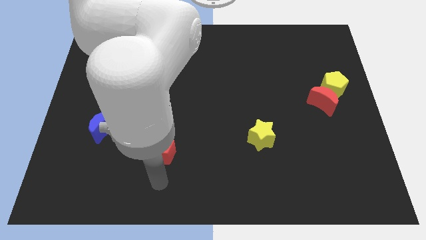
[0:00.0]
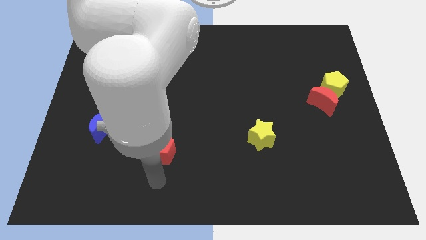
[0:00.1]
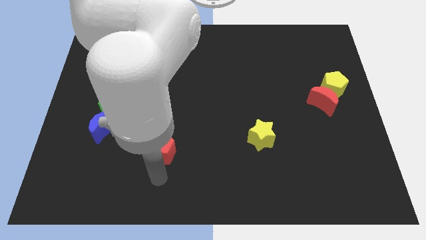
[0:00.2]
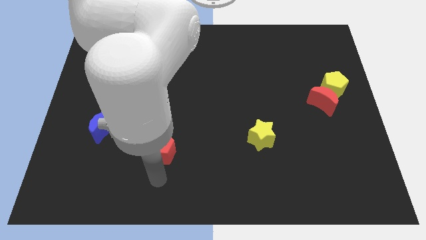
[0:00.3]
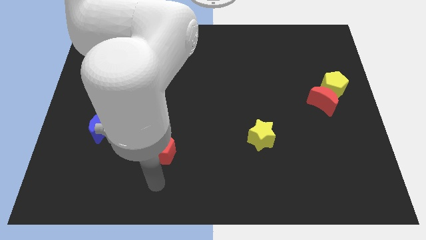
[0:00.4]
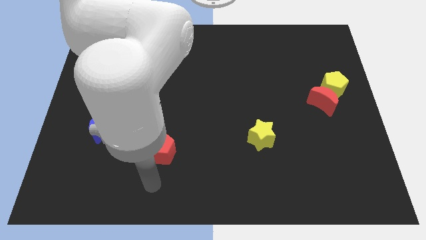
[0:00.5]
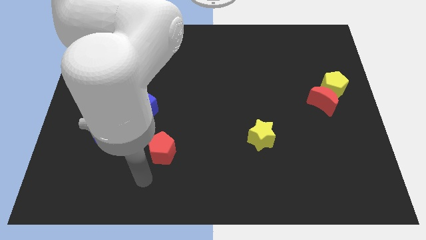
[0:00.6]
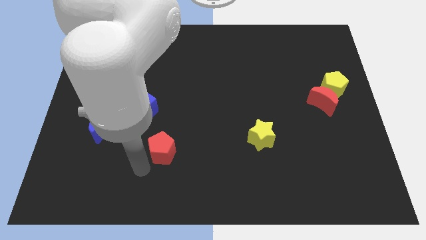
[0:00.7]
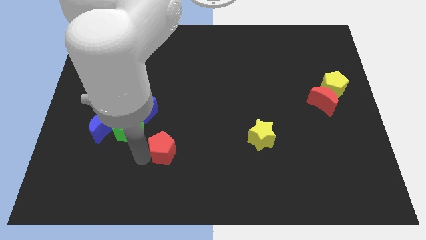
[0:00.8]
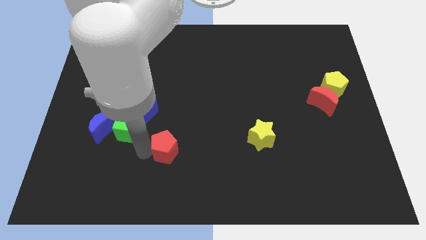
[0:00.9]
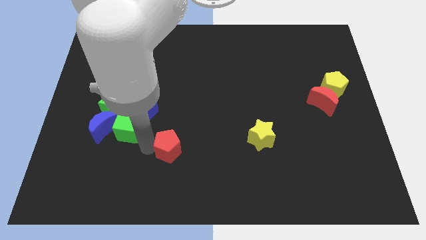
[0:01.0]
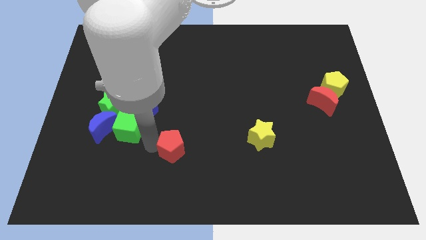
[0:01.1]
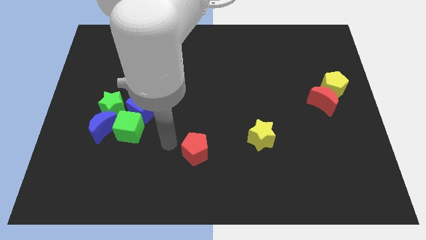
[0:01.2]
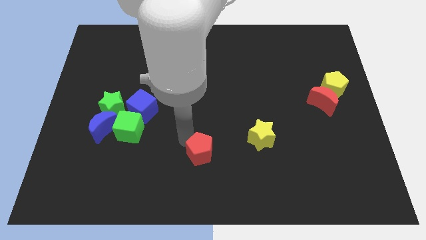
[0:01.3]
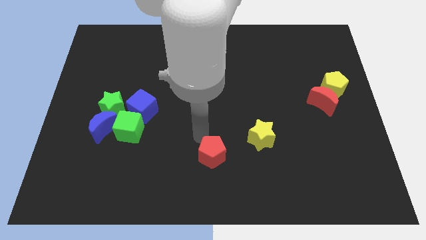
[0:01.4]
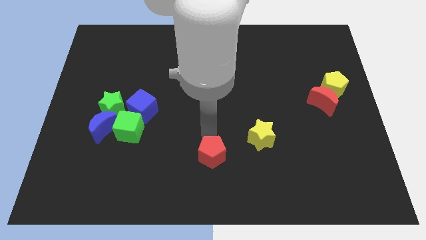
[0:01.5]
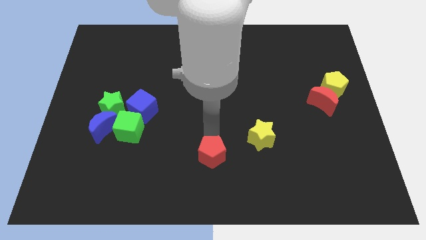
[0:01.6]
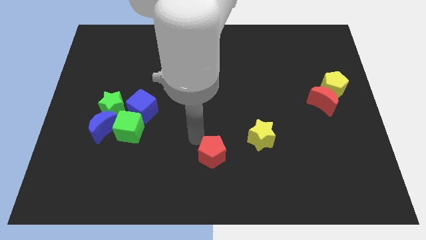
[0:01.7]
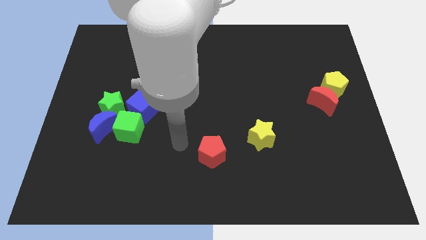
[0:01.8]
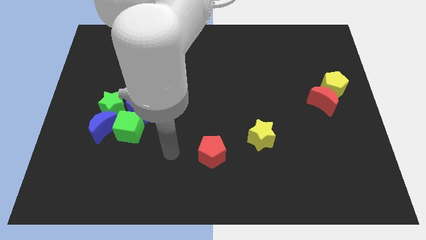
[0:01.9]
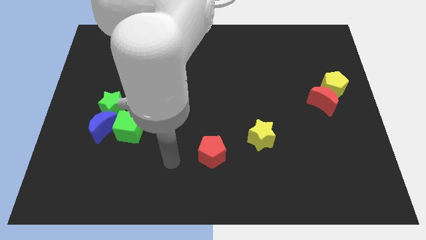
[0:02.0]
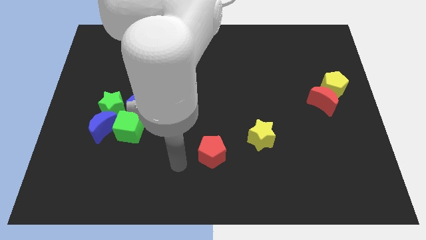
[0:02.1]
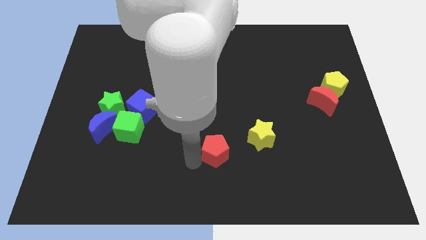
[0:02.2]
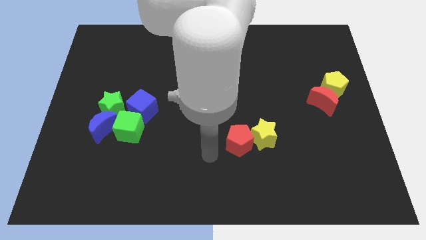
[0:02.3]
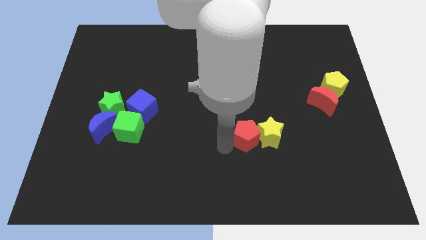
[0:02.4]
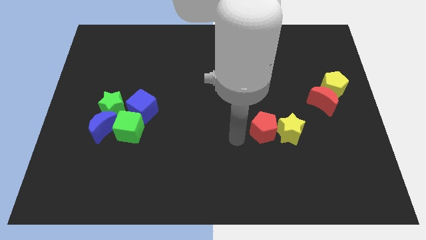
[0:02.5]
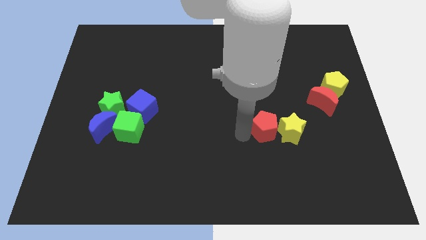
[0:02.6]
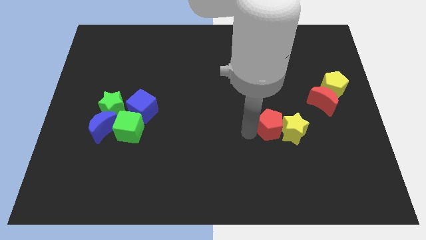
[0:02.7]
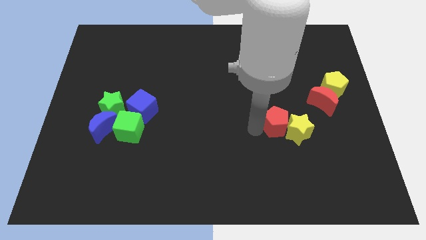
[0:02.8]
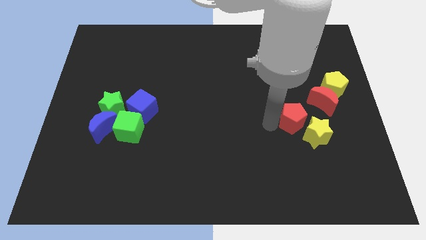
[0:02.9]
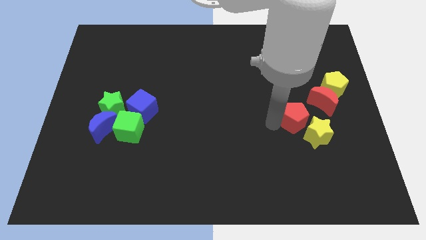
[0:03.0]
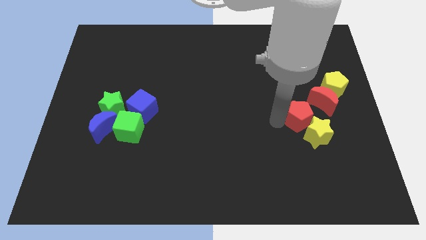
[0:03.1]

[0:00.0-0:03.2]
move red pentagon left above the yellow star

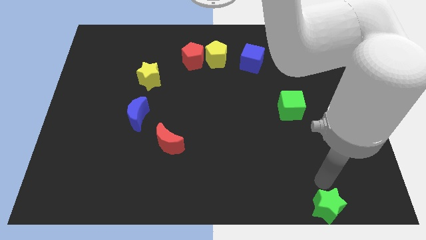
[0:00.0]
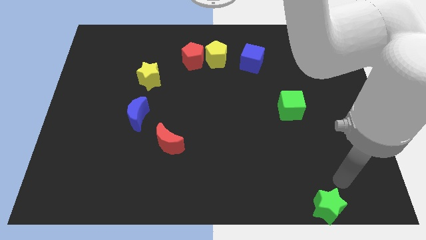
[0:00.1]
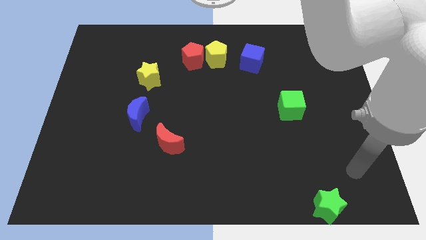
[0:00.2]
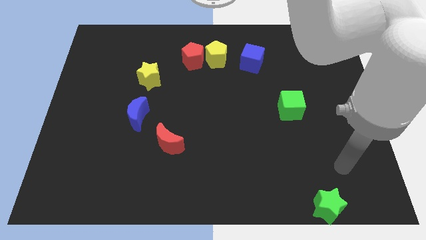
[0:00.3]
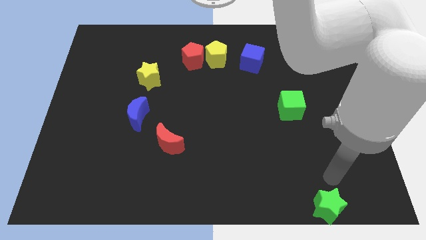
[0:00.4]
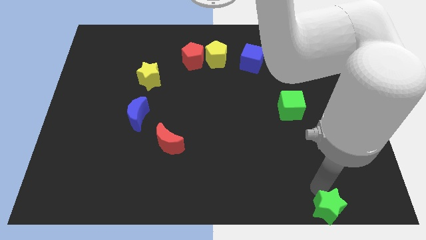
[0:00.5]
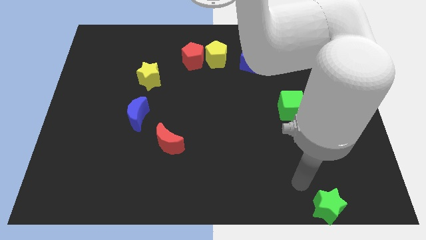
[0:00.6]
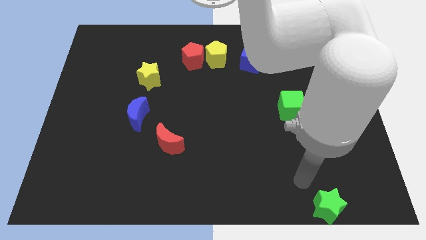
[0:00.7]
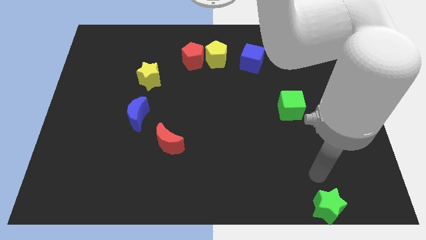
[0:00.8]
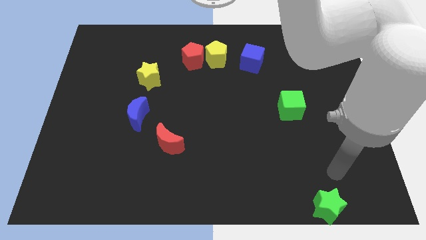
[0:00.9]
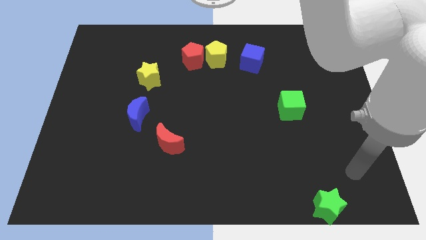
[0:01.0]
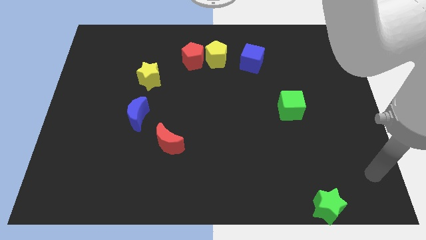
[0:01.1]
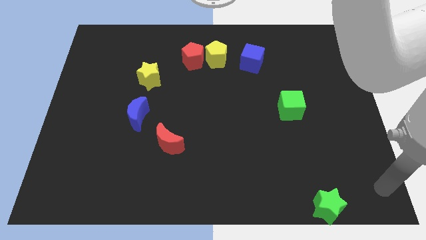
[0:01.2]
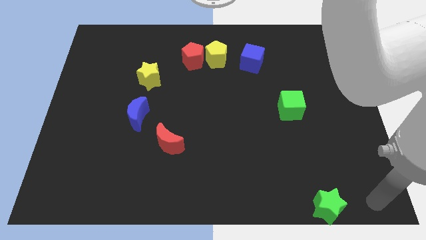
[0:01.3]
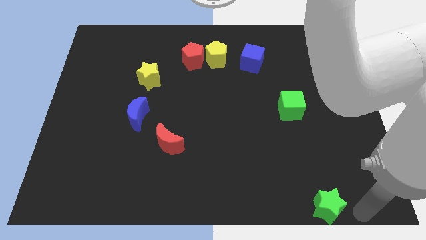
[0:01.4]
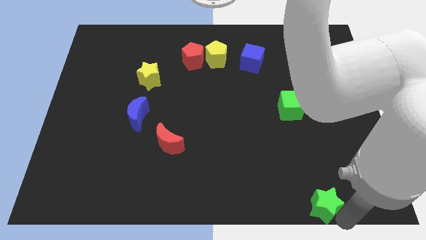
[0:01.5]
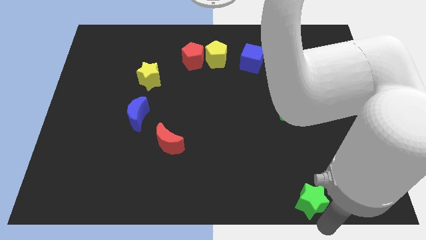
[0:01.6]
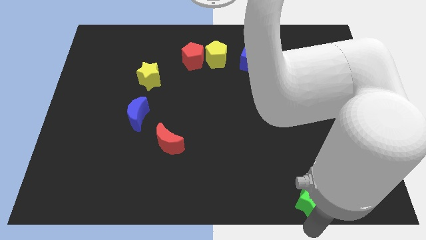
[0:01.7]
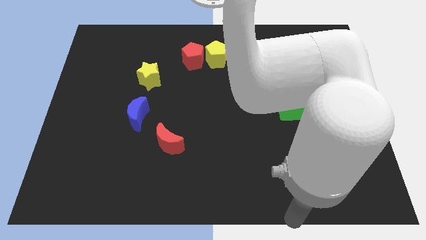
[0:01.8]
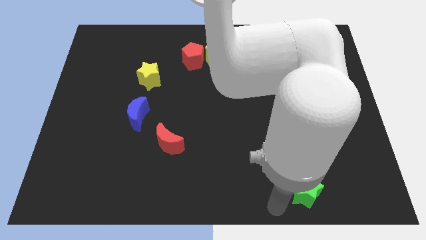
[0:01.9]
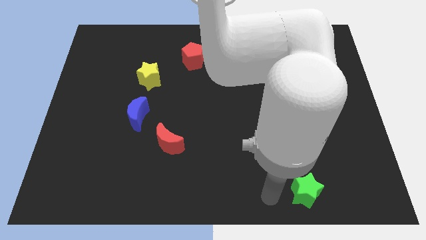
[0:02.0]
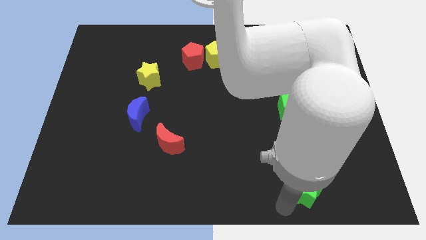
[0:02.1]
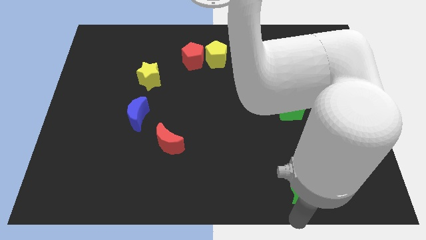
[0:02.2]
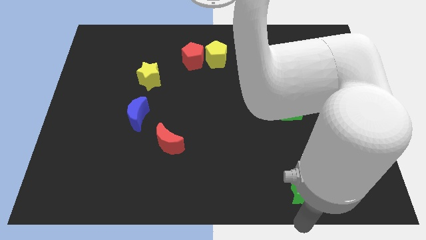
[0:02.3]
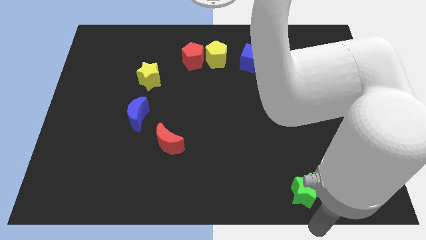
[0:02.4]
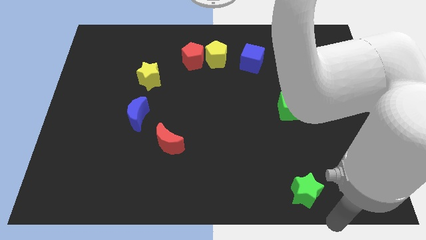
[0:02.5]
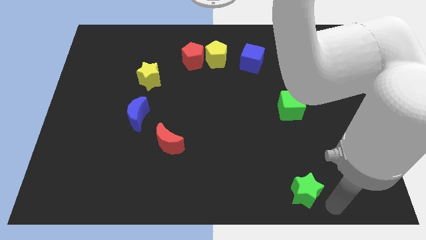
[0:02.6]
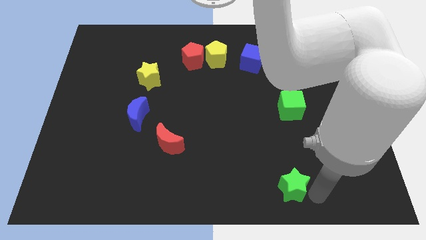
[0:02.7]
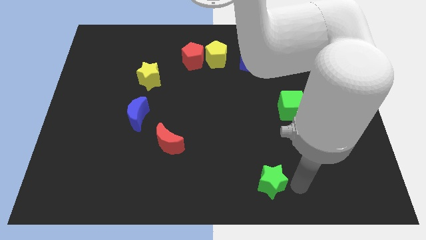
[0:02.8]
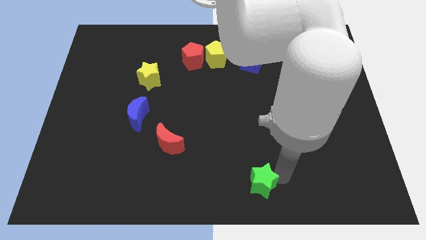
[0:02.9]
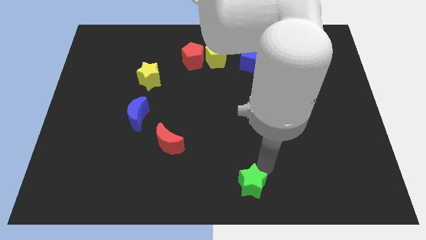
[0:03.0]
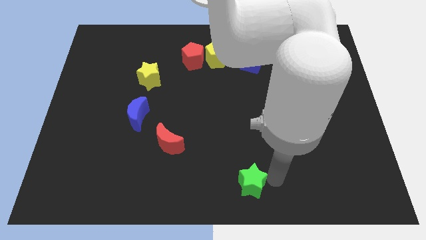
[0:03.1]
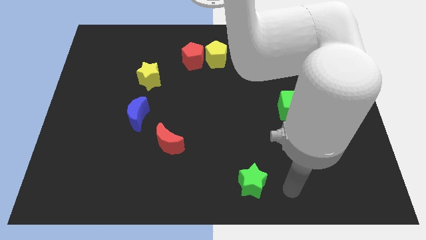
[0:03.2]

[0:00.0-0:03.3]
push the green star towards the left side of the board

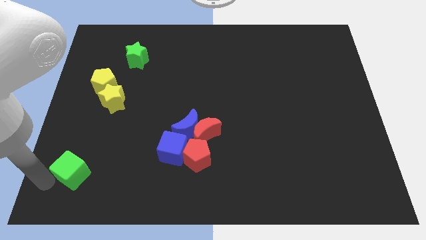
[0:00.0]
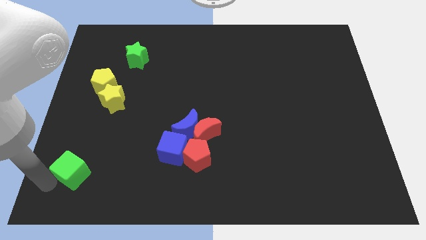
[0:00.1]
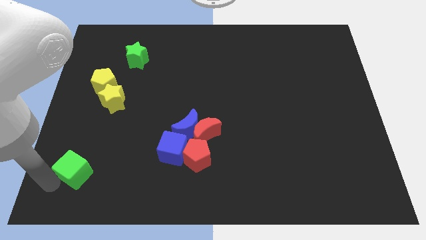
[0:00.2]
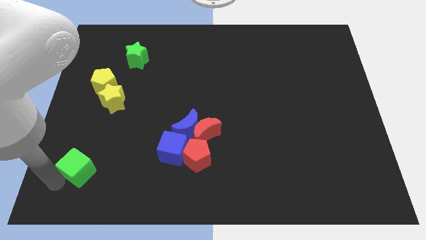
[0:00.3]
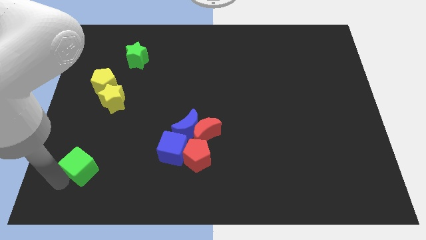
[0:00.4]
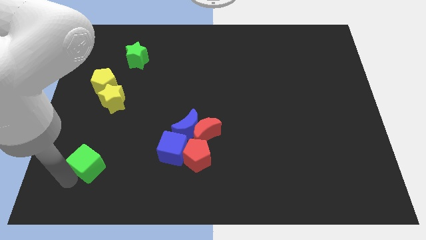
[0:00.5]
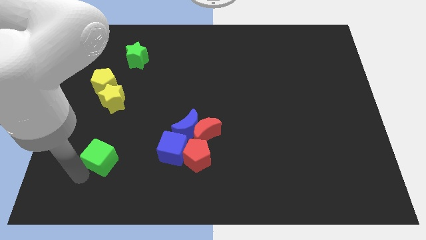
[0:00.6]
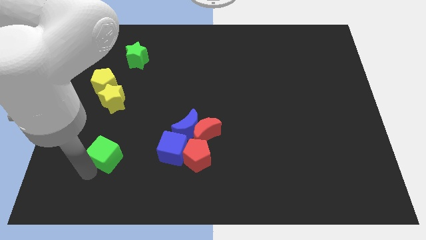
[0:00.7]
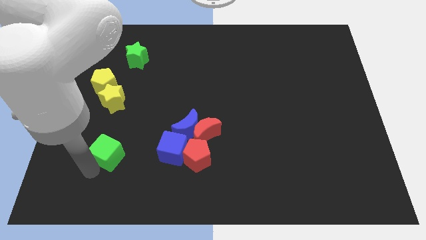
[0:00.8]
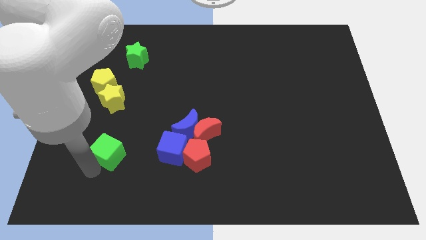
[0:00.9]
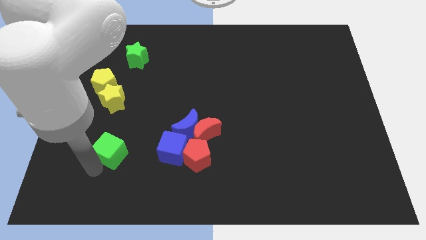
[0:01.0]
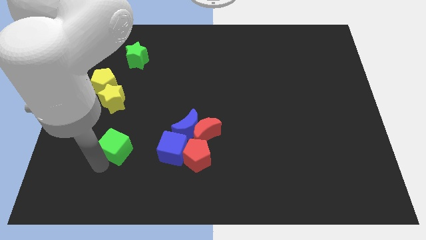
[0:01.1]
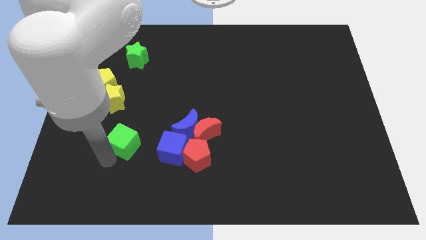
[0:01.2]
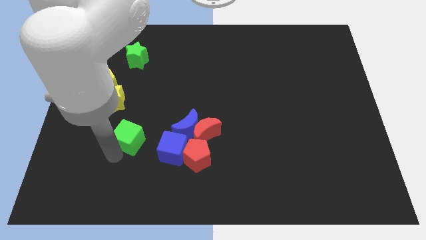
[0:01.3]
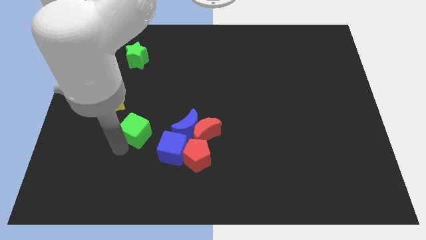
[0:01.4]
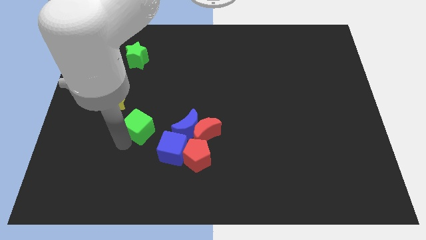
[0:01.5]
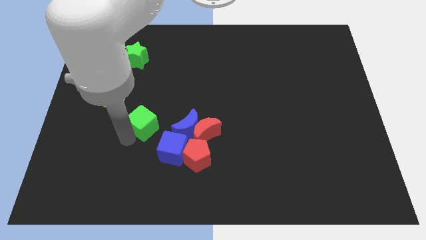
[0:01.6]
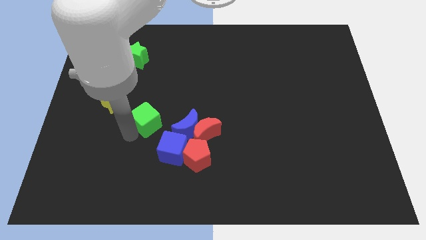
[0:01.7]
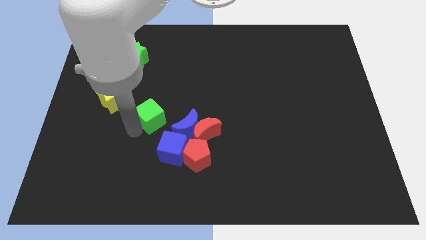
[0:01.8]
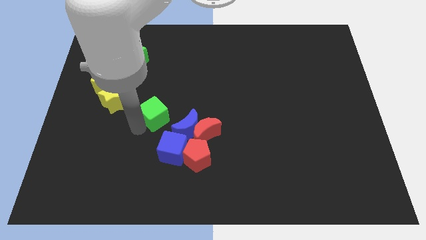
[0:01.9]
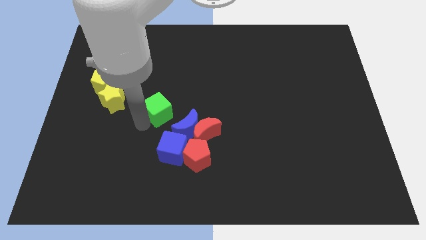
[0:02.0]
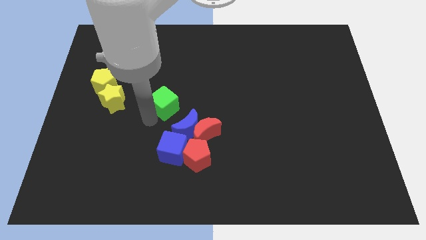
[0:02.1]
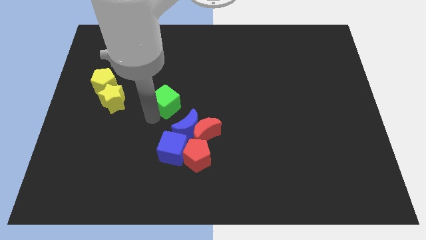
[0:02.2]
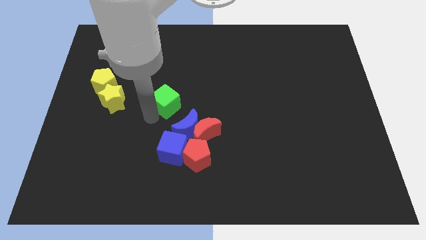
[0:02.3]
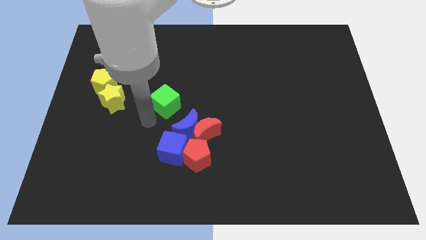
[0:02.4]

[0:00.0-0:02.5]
push green cube diagonally towards blue crescent
